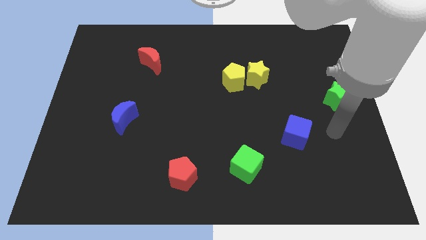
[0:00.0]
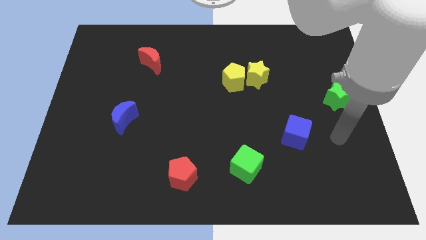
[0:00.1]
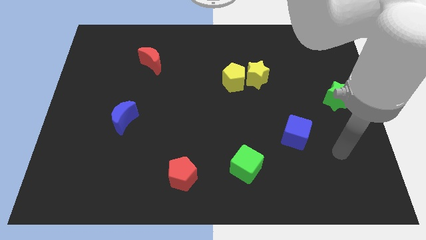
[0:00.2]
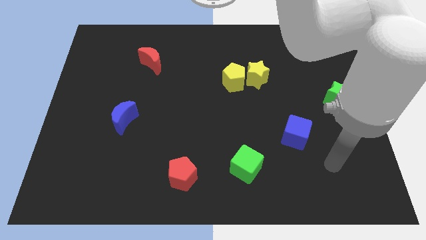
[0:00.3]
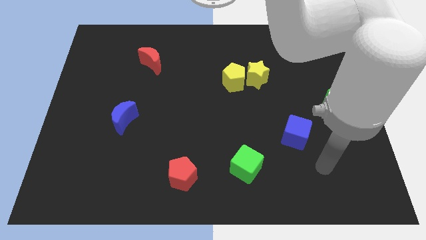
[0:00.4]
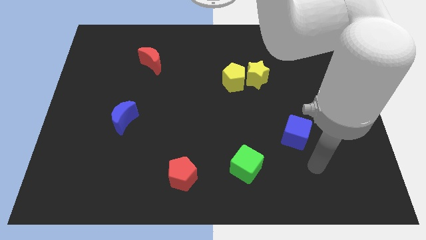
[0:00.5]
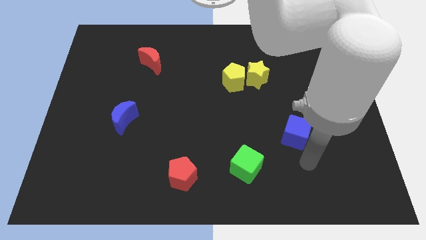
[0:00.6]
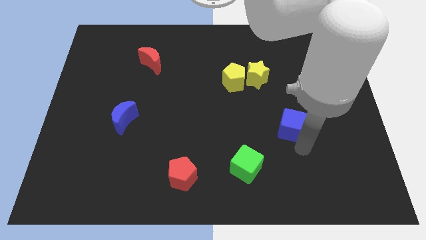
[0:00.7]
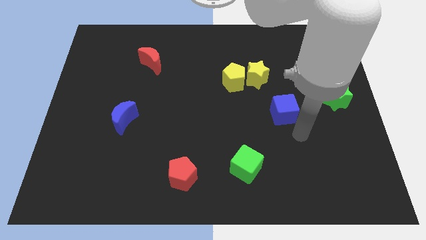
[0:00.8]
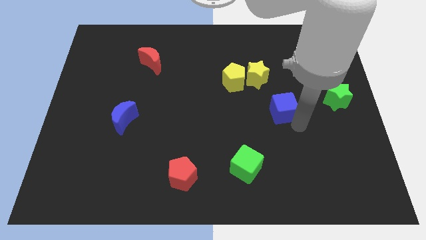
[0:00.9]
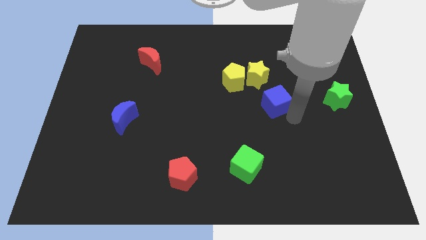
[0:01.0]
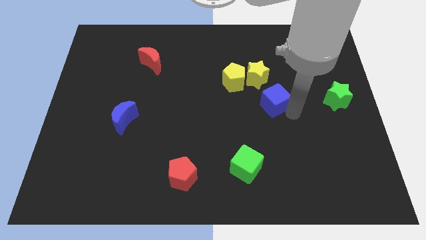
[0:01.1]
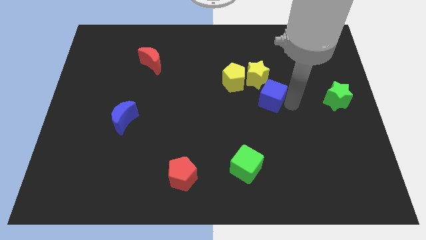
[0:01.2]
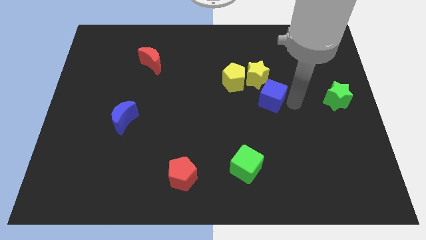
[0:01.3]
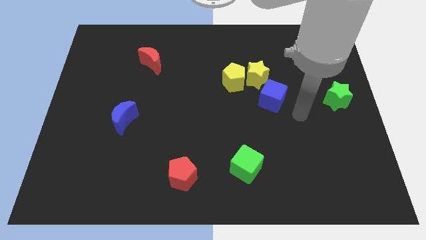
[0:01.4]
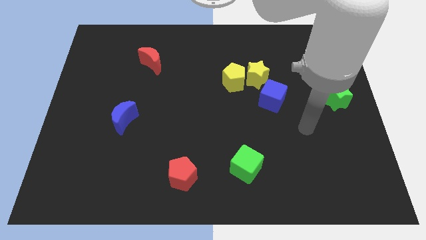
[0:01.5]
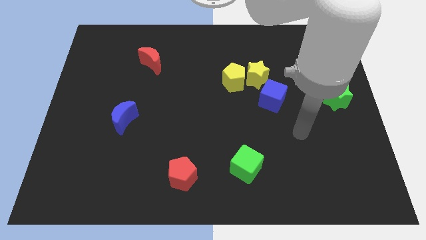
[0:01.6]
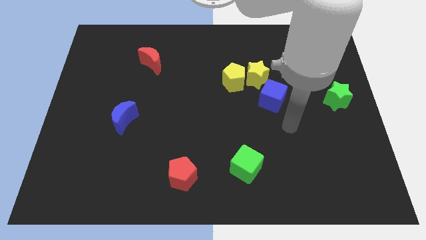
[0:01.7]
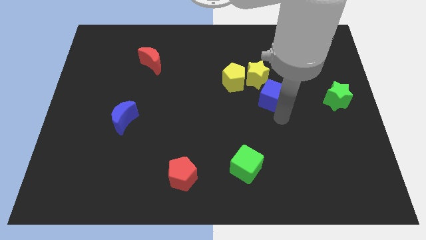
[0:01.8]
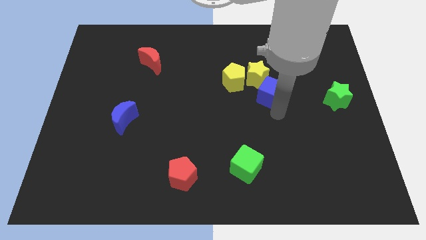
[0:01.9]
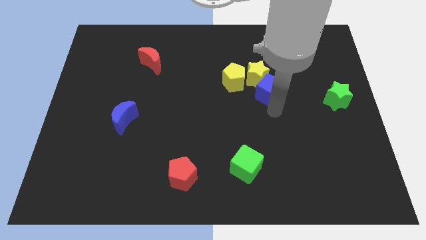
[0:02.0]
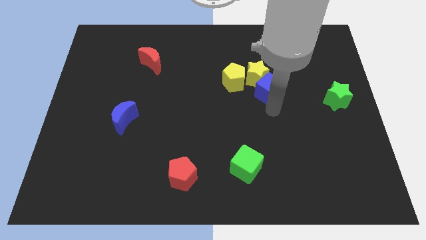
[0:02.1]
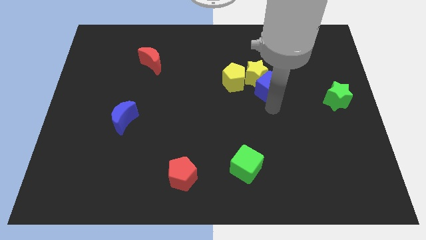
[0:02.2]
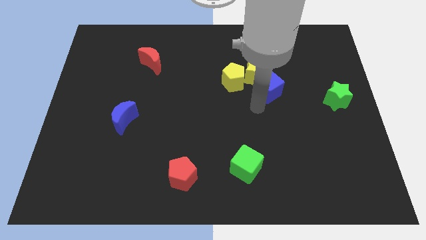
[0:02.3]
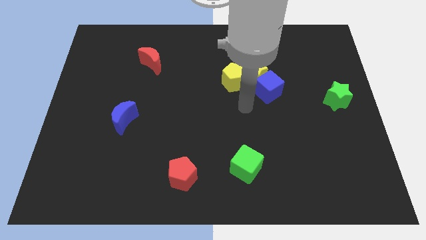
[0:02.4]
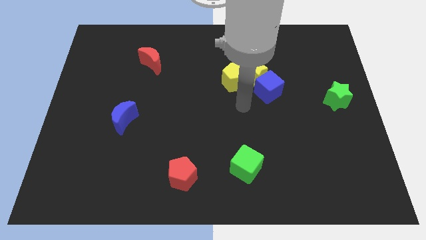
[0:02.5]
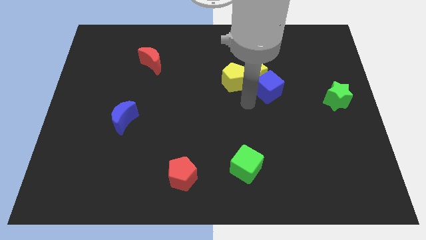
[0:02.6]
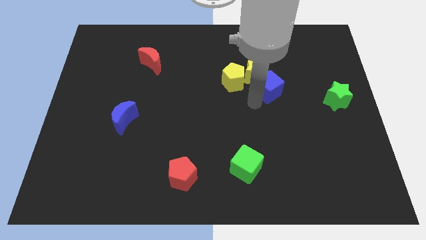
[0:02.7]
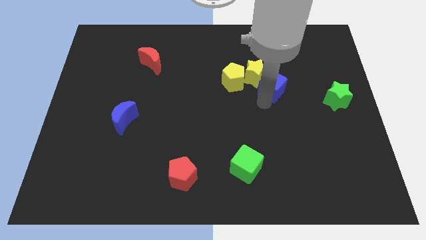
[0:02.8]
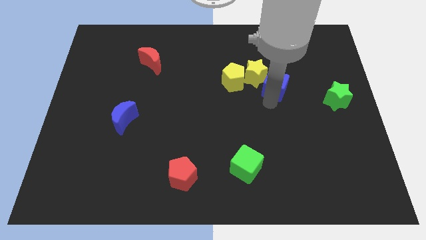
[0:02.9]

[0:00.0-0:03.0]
push the blue cube into the bottom side of the yellow star

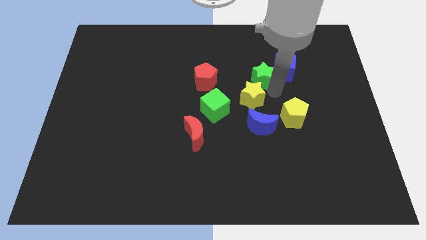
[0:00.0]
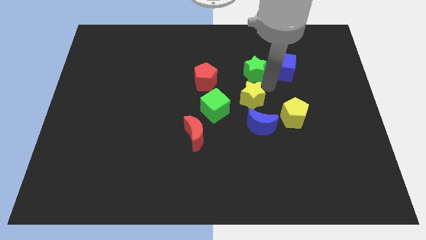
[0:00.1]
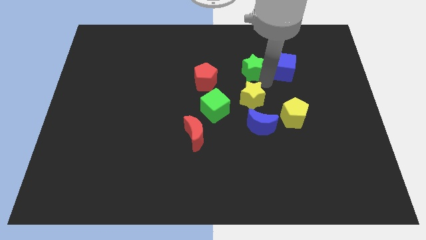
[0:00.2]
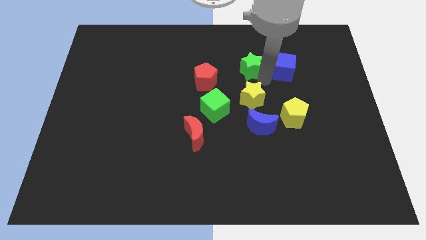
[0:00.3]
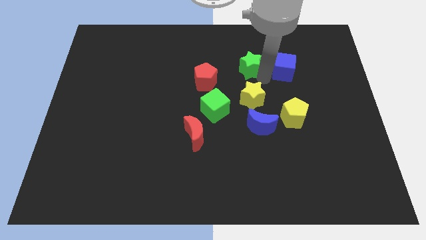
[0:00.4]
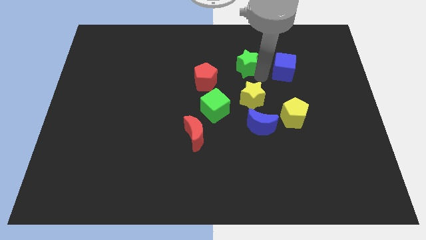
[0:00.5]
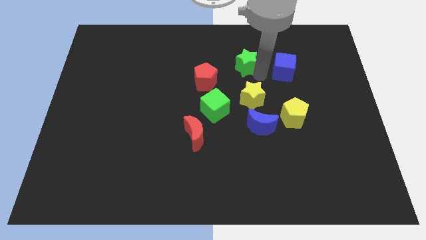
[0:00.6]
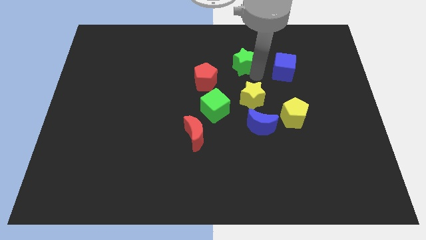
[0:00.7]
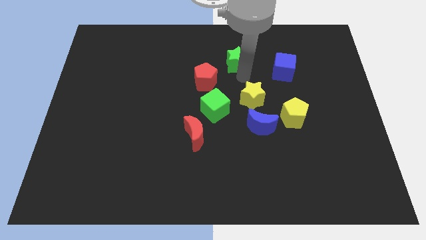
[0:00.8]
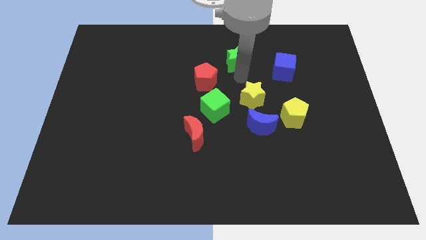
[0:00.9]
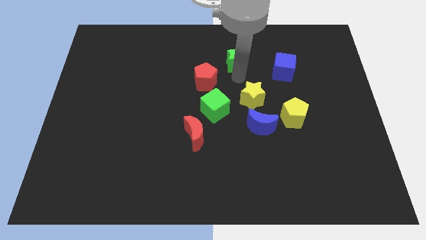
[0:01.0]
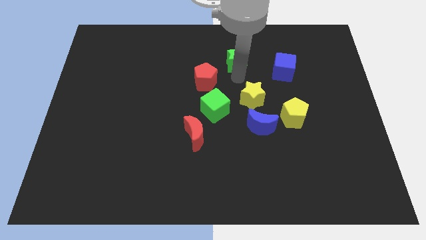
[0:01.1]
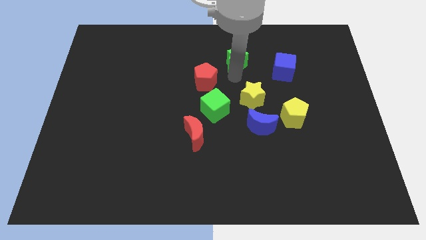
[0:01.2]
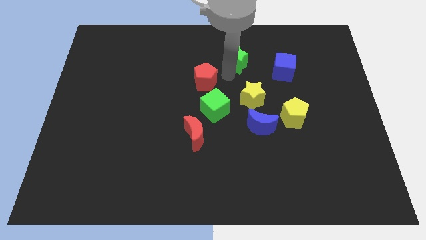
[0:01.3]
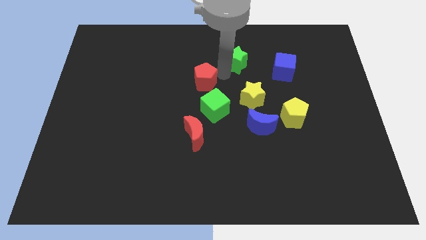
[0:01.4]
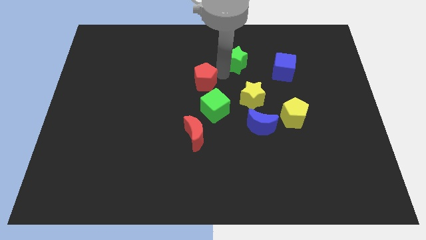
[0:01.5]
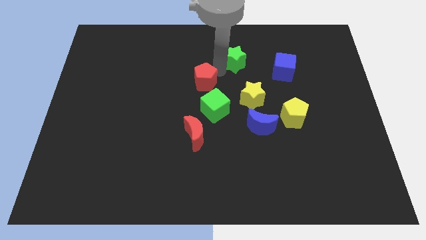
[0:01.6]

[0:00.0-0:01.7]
slide the green star to the top side of the board

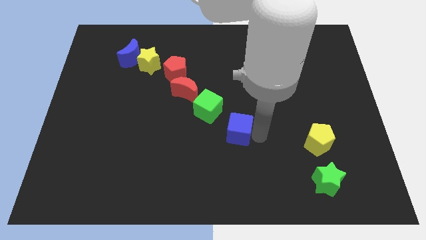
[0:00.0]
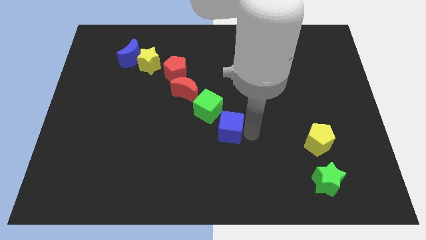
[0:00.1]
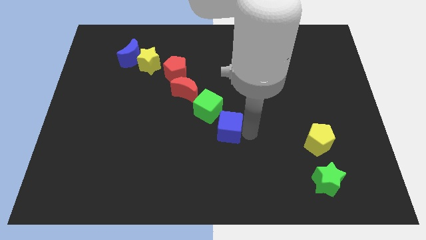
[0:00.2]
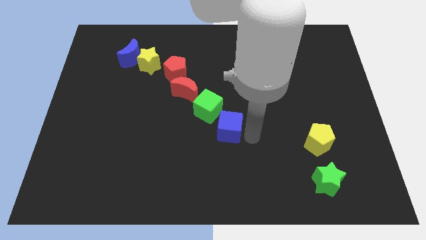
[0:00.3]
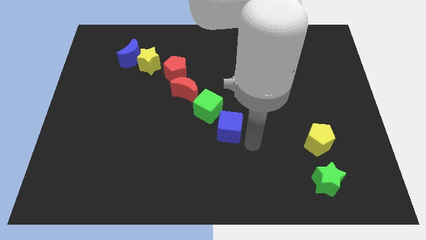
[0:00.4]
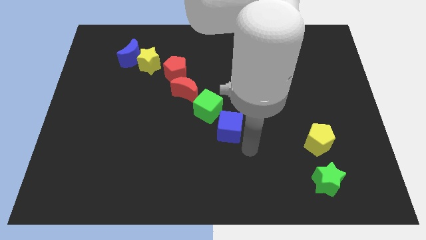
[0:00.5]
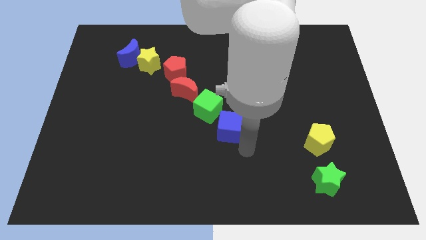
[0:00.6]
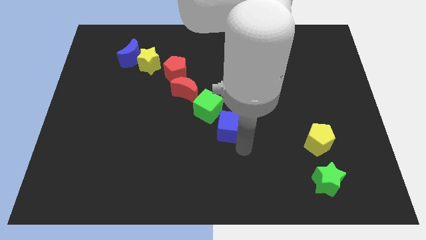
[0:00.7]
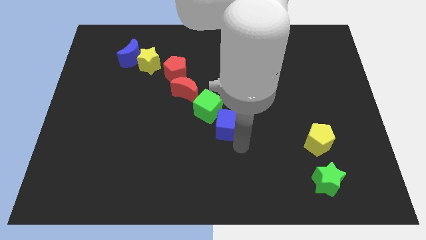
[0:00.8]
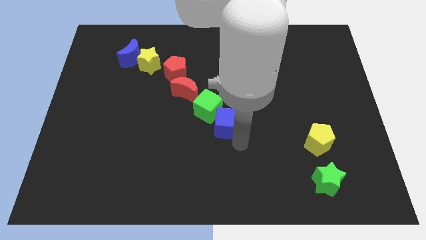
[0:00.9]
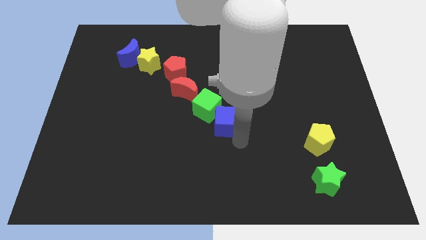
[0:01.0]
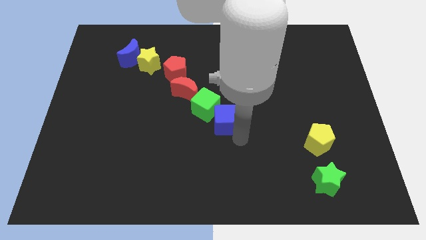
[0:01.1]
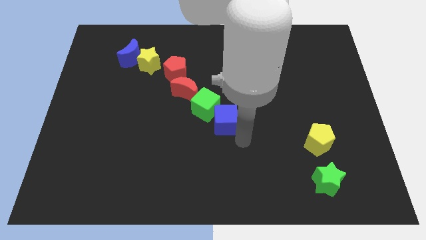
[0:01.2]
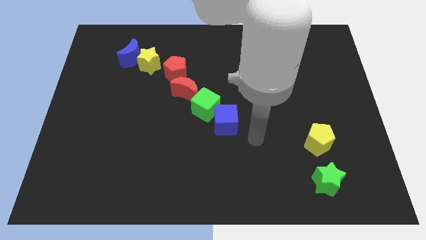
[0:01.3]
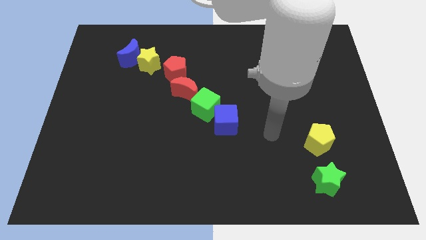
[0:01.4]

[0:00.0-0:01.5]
push the blue cube into the green cube

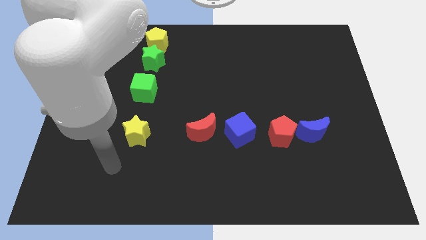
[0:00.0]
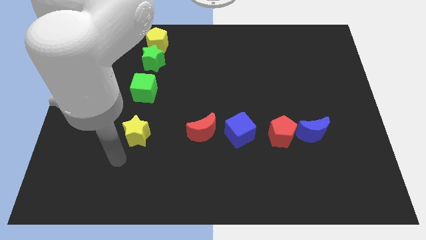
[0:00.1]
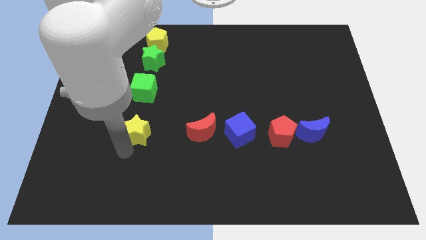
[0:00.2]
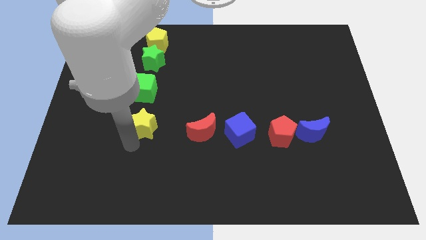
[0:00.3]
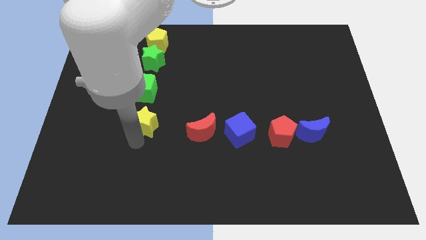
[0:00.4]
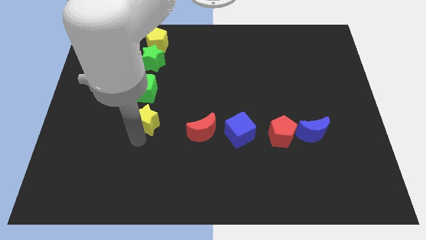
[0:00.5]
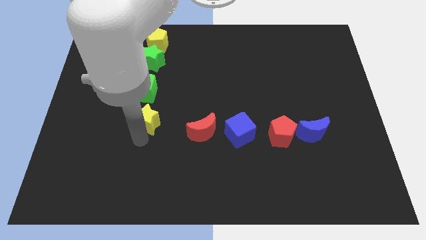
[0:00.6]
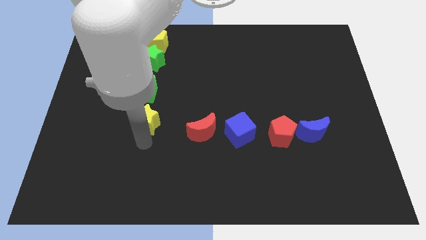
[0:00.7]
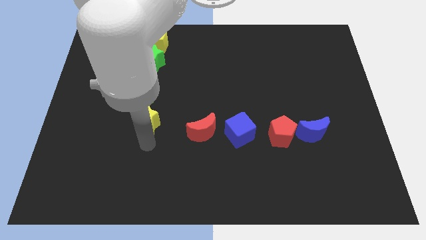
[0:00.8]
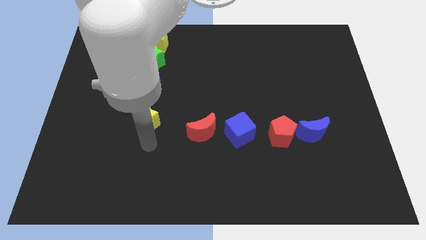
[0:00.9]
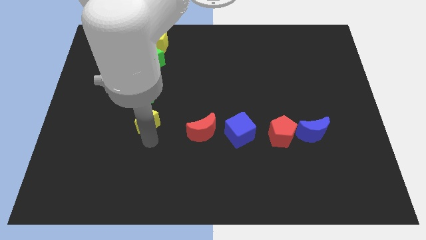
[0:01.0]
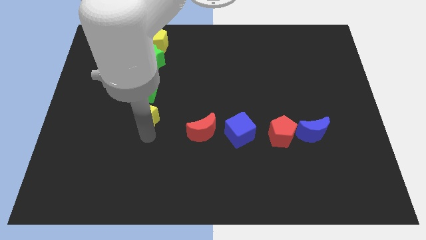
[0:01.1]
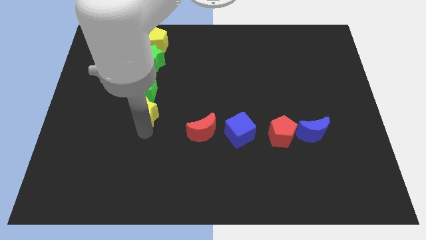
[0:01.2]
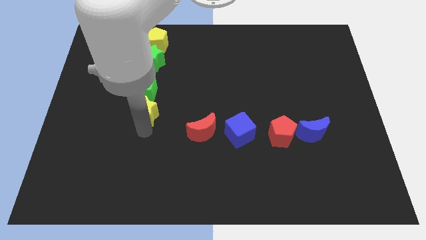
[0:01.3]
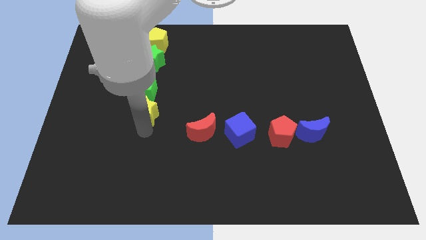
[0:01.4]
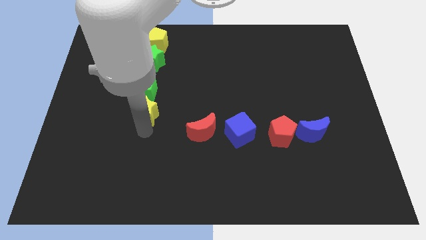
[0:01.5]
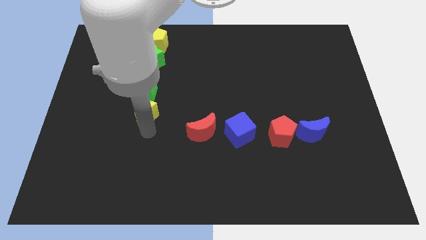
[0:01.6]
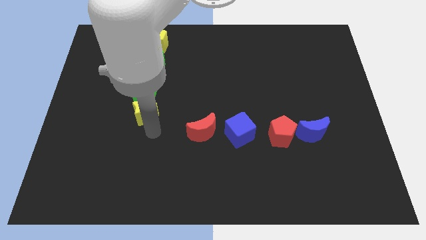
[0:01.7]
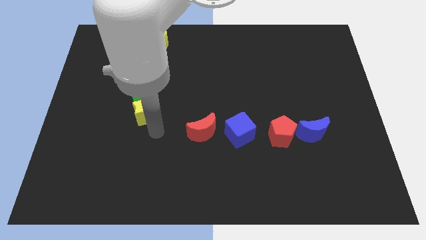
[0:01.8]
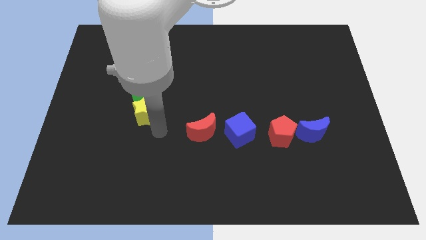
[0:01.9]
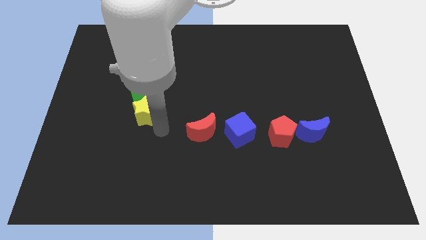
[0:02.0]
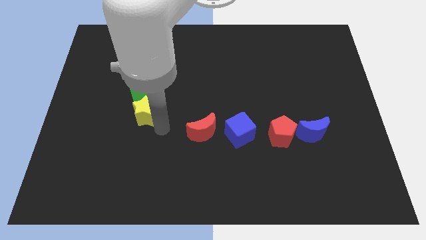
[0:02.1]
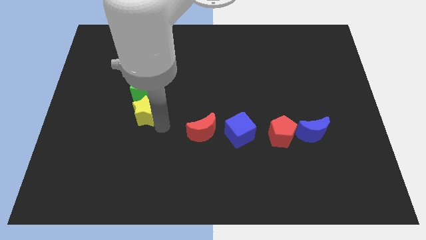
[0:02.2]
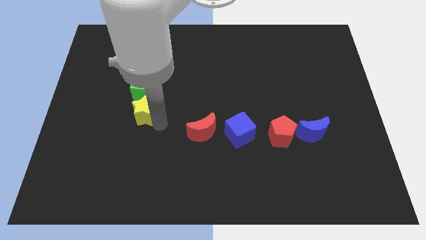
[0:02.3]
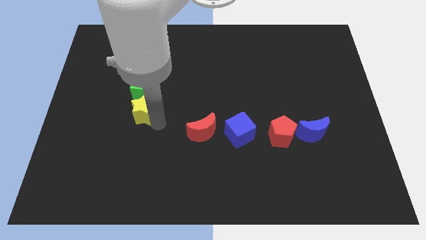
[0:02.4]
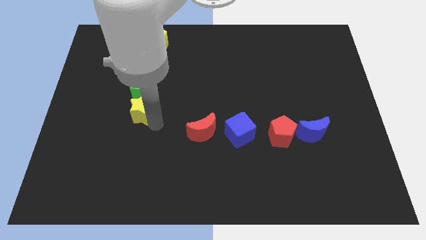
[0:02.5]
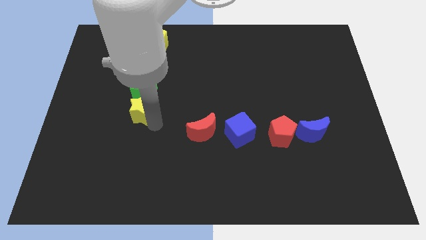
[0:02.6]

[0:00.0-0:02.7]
move yellow star close to green cube
